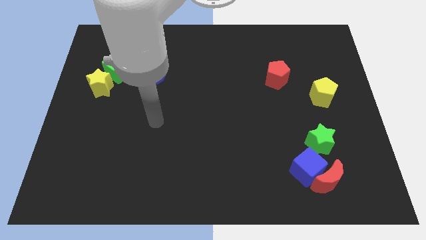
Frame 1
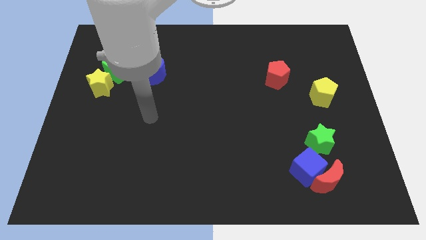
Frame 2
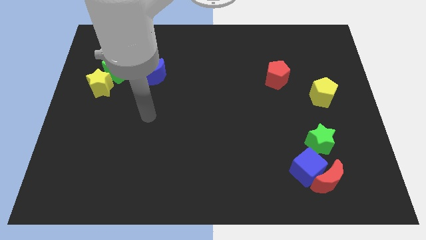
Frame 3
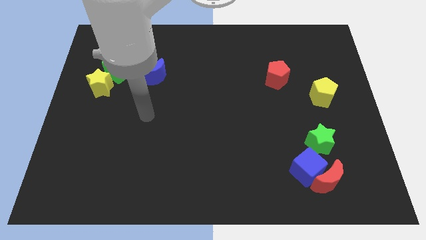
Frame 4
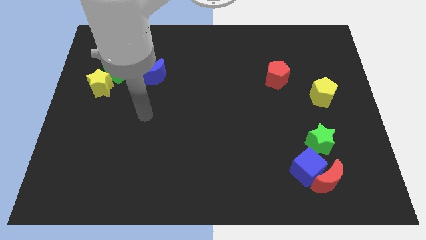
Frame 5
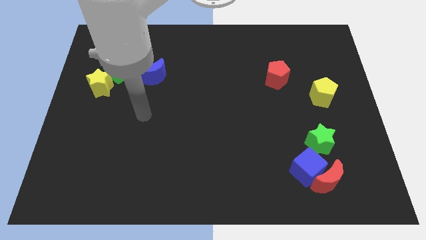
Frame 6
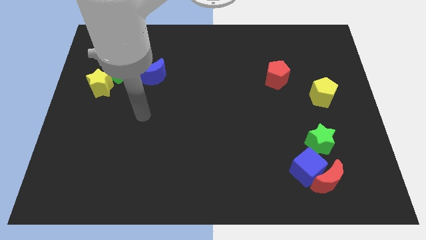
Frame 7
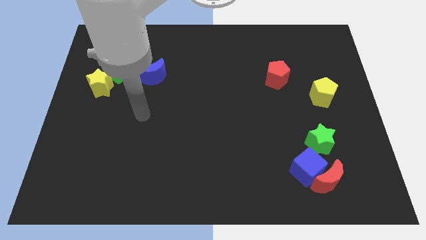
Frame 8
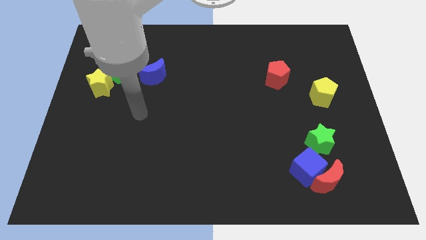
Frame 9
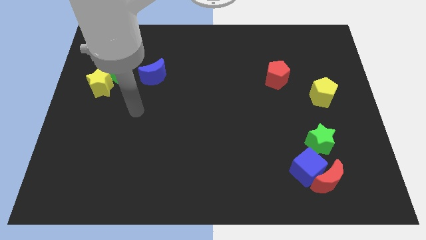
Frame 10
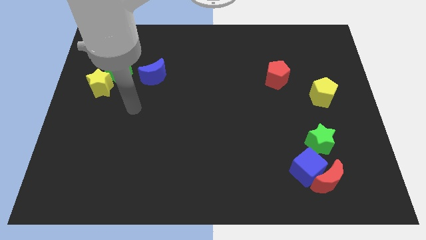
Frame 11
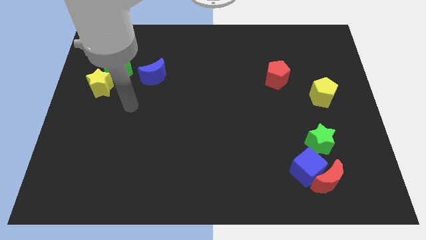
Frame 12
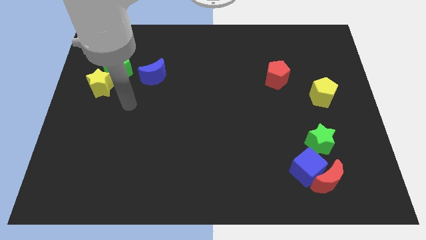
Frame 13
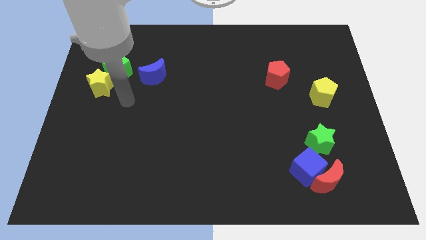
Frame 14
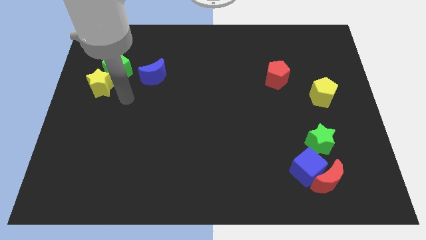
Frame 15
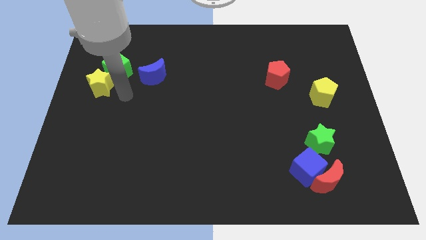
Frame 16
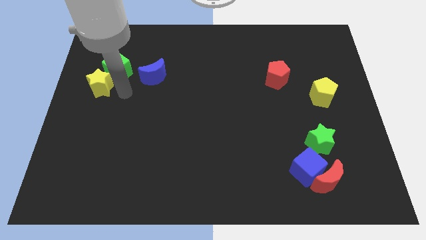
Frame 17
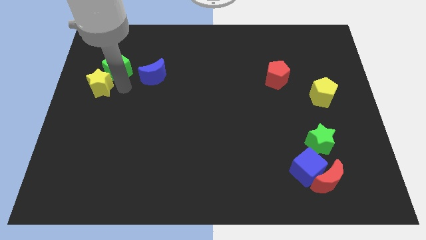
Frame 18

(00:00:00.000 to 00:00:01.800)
move your arm to the right side of the yellow star

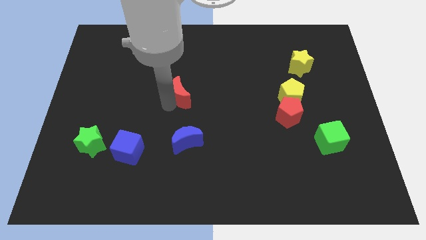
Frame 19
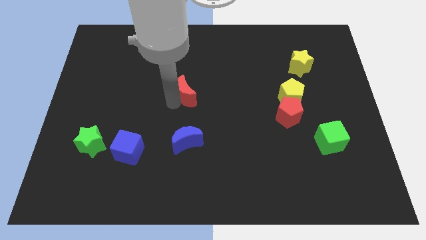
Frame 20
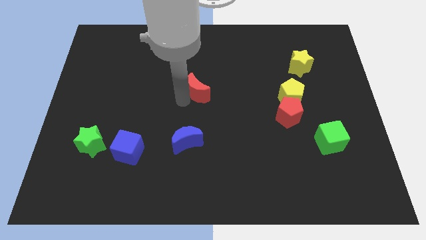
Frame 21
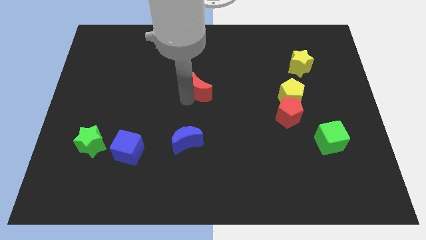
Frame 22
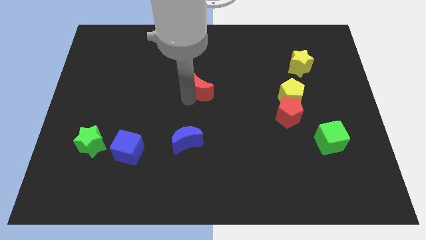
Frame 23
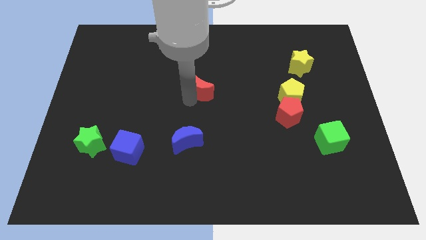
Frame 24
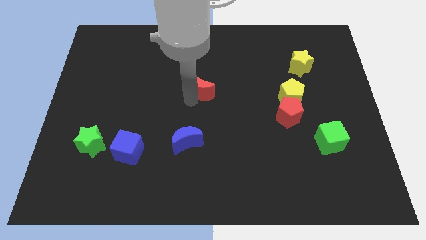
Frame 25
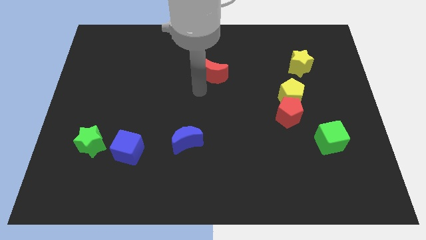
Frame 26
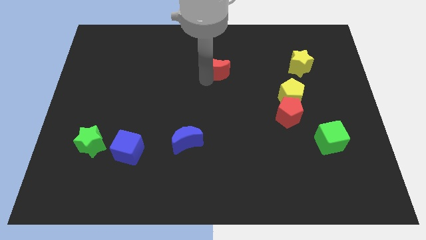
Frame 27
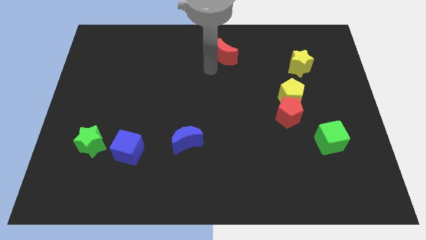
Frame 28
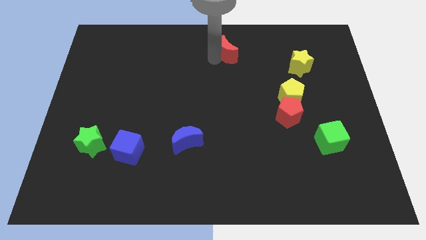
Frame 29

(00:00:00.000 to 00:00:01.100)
slide the red moon diagonally on the top left side of the yellow pentagon

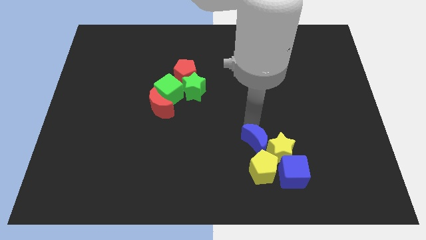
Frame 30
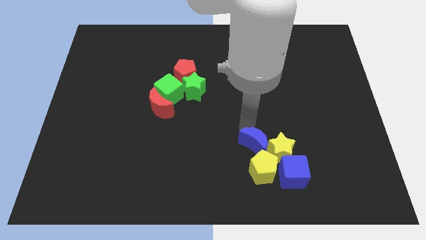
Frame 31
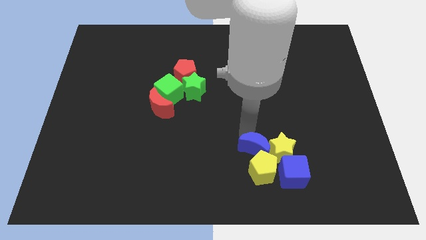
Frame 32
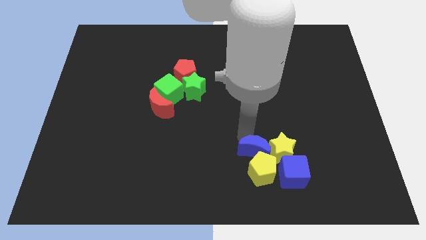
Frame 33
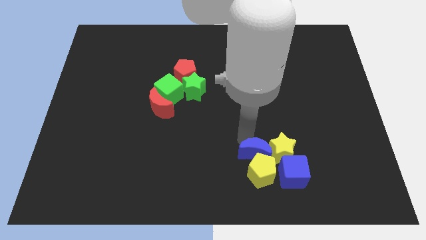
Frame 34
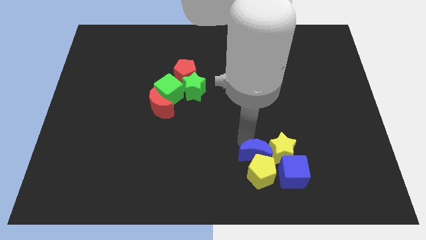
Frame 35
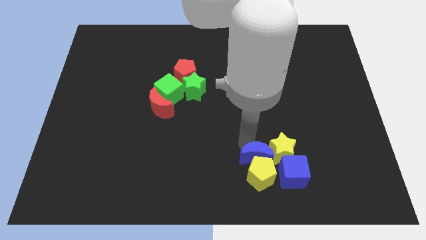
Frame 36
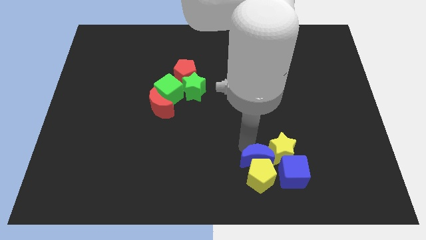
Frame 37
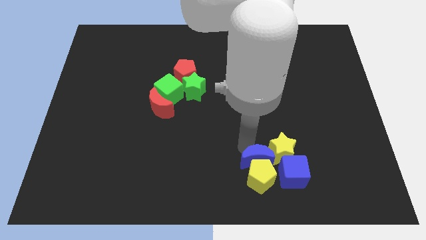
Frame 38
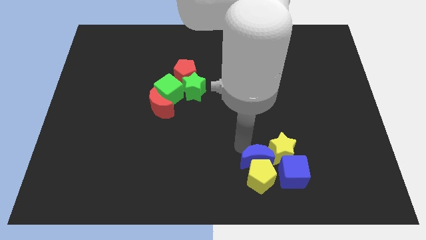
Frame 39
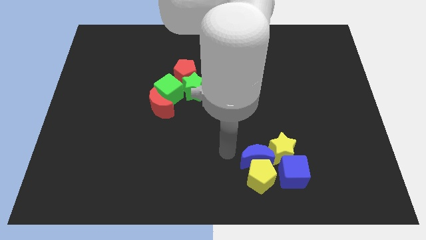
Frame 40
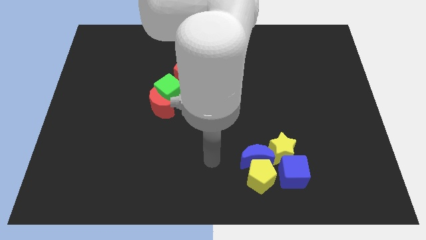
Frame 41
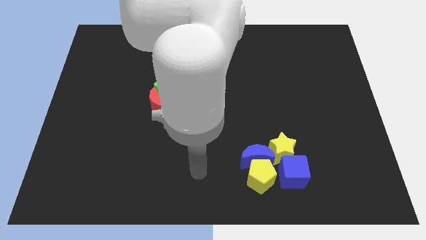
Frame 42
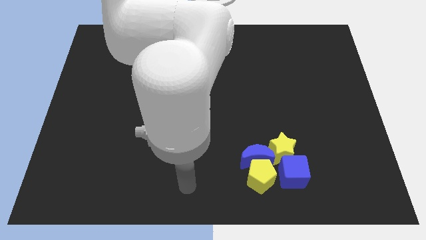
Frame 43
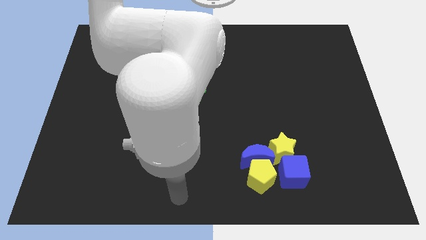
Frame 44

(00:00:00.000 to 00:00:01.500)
push the blue crescent to the group of blocks

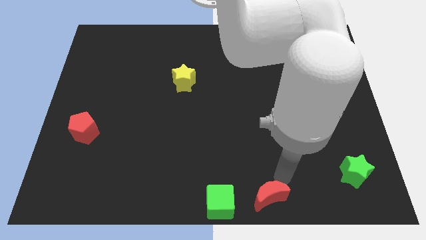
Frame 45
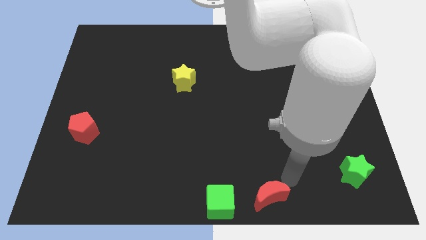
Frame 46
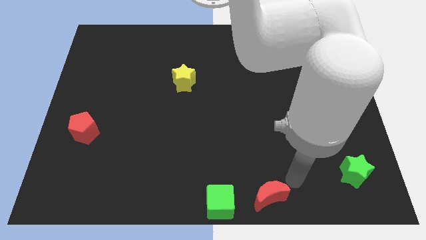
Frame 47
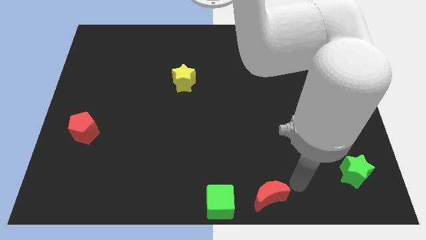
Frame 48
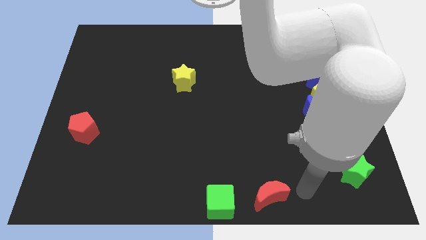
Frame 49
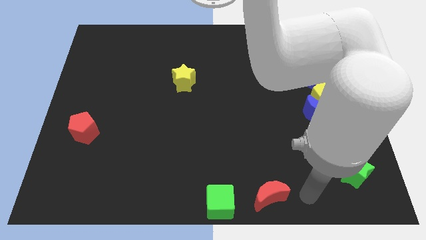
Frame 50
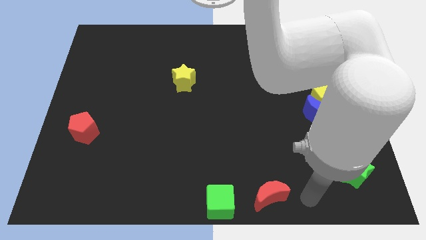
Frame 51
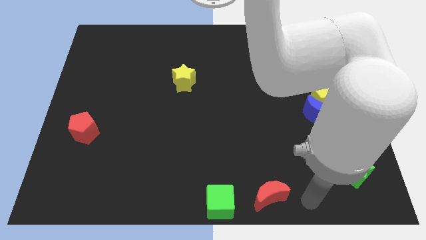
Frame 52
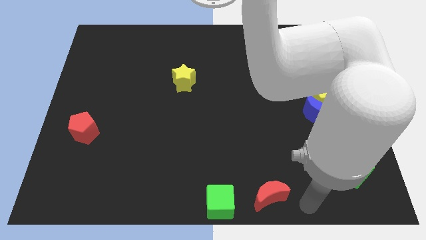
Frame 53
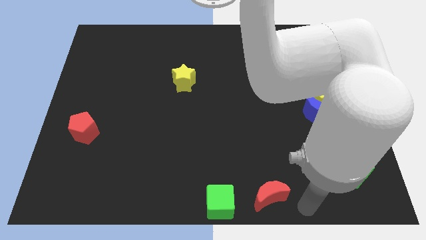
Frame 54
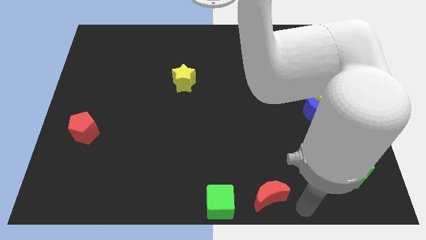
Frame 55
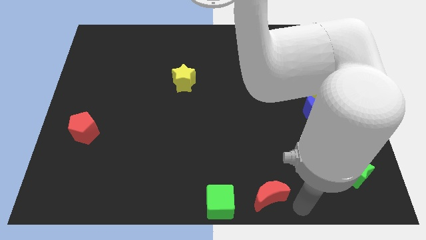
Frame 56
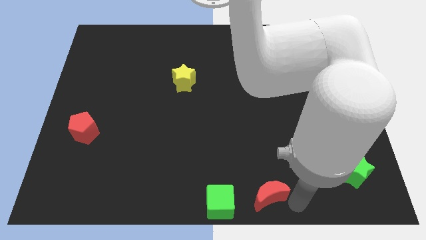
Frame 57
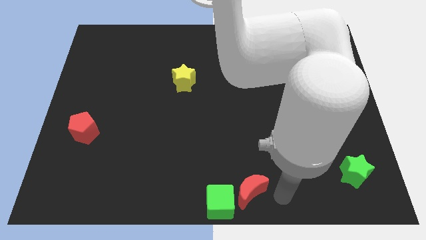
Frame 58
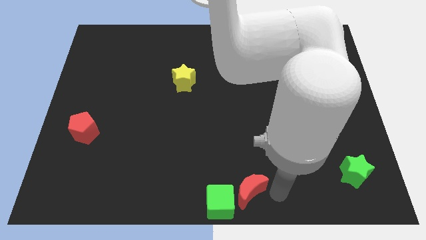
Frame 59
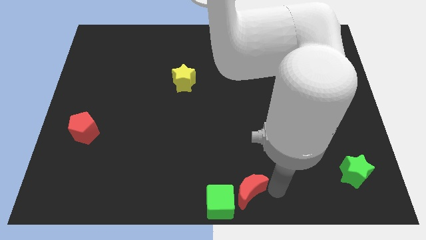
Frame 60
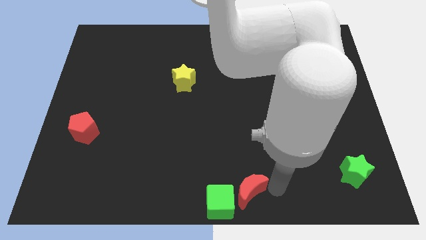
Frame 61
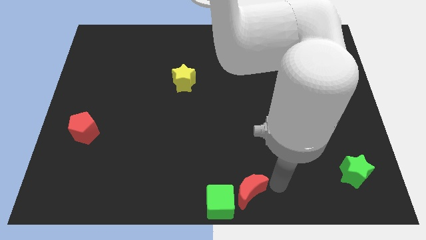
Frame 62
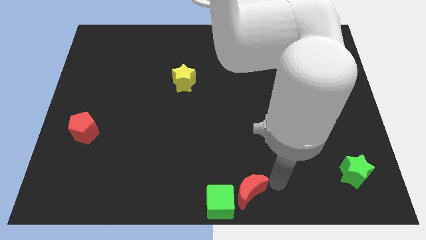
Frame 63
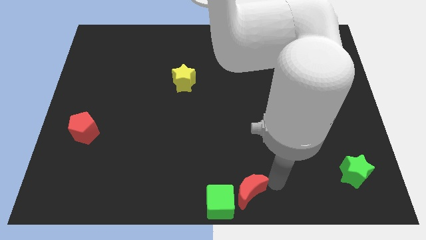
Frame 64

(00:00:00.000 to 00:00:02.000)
move the red moon close to the green cube

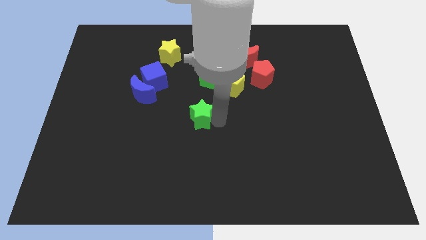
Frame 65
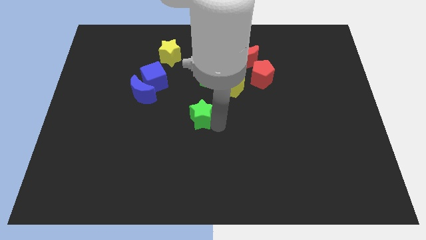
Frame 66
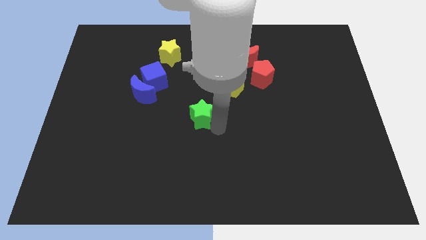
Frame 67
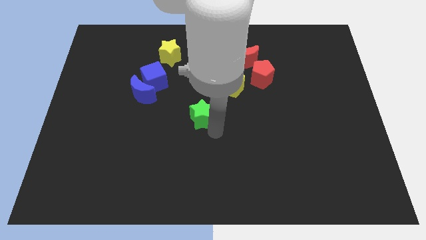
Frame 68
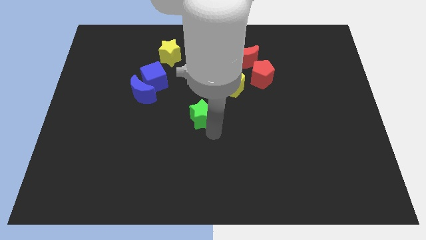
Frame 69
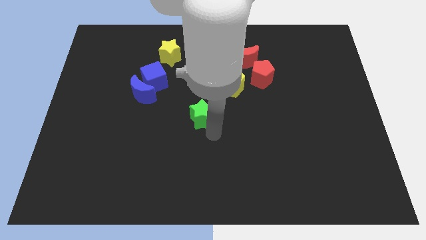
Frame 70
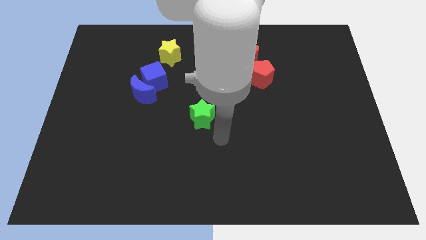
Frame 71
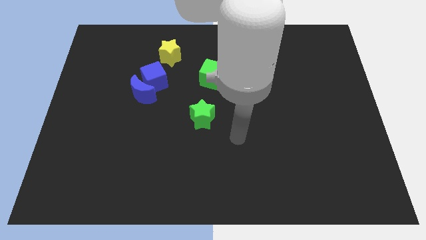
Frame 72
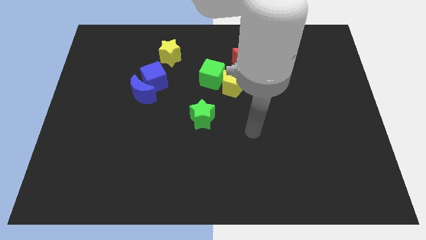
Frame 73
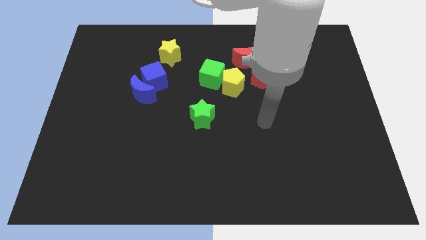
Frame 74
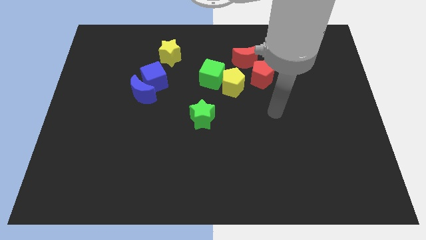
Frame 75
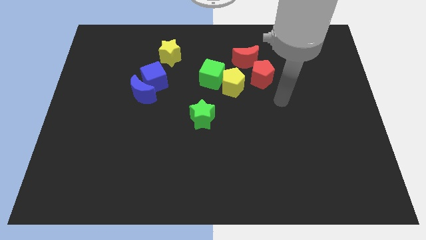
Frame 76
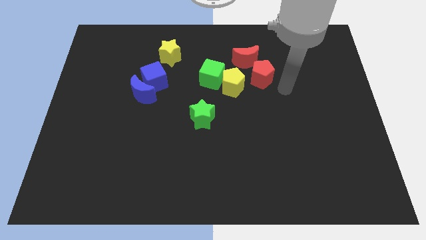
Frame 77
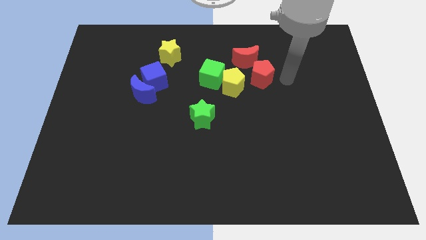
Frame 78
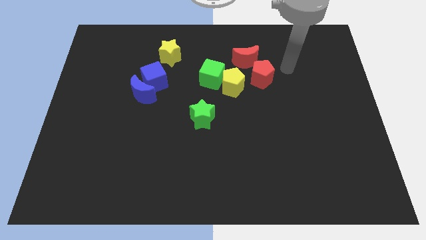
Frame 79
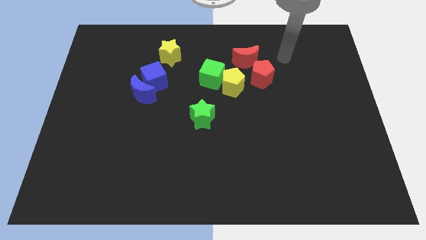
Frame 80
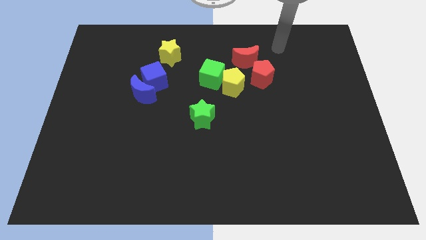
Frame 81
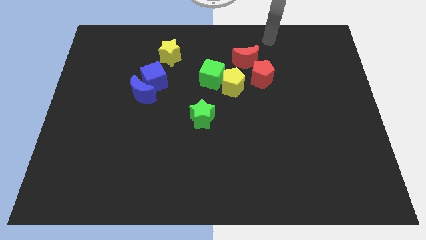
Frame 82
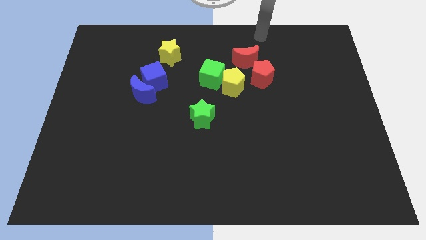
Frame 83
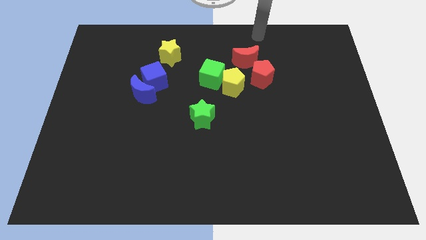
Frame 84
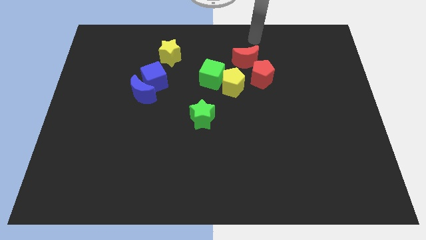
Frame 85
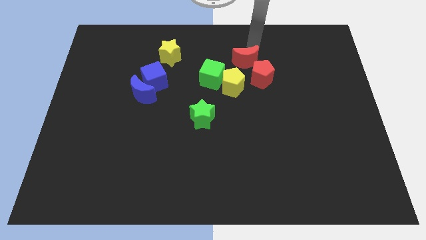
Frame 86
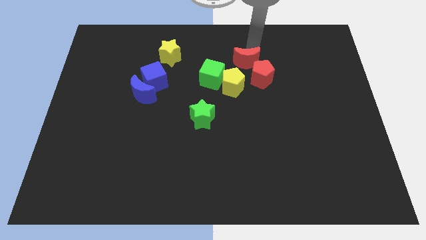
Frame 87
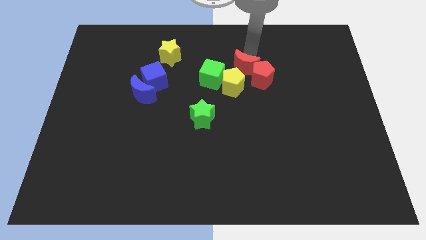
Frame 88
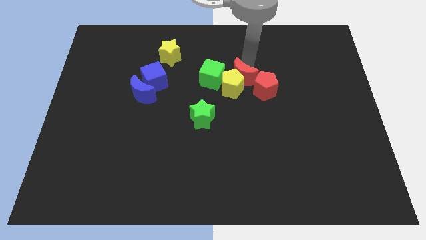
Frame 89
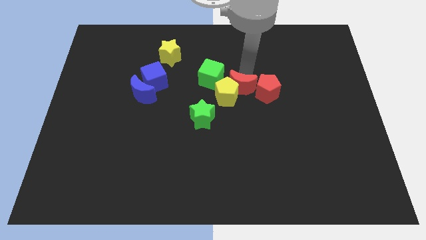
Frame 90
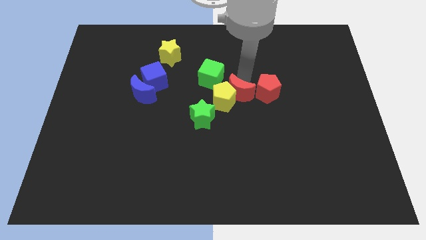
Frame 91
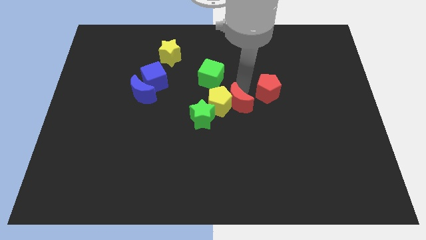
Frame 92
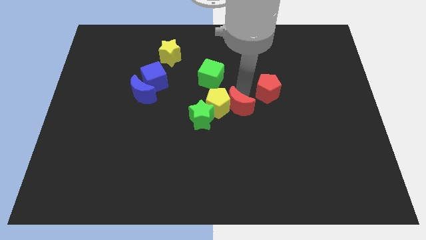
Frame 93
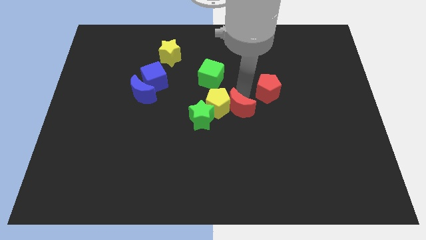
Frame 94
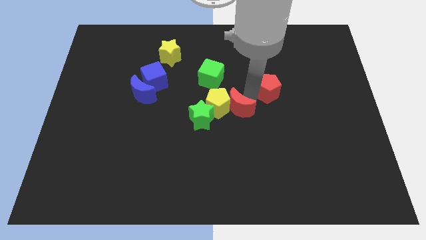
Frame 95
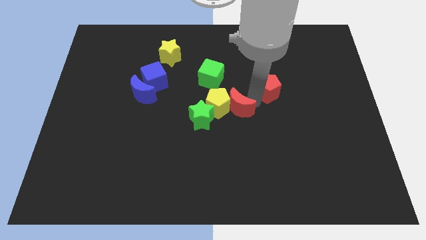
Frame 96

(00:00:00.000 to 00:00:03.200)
push the red crescent into the yellow pentagon
